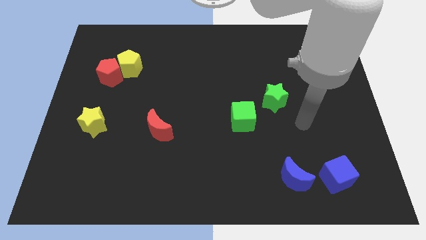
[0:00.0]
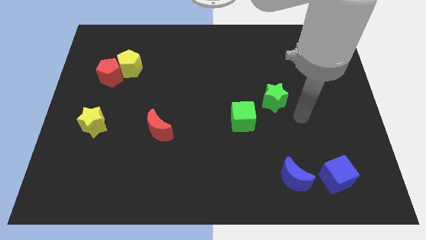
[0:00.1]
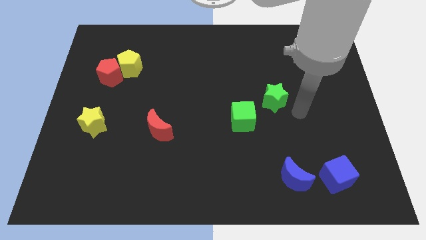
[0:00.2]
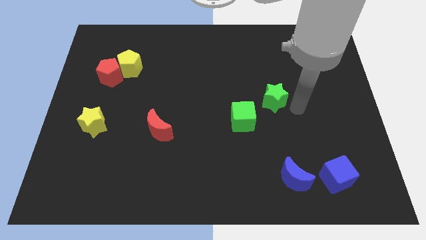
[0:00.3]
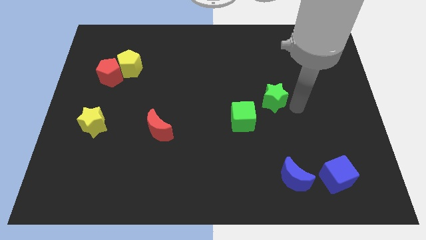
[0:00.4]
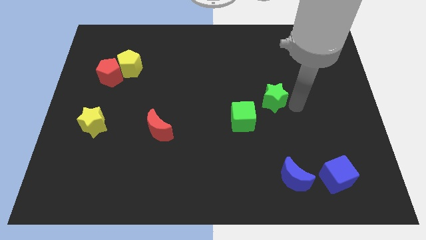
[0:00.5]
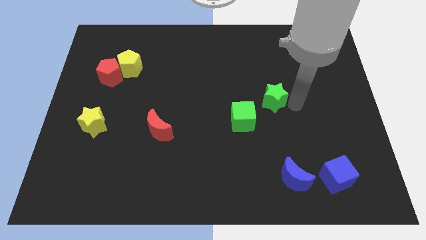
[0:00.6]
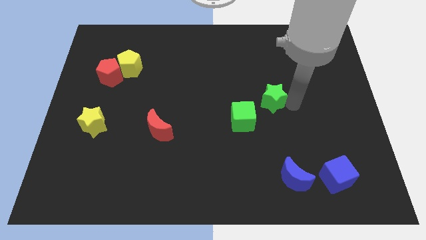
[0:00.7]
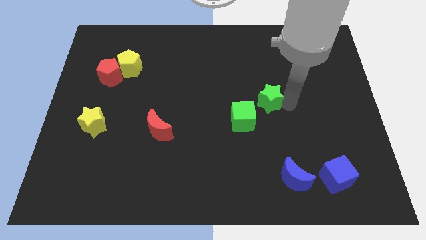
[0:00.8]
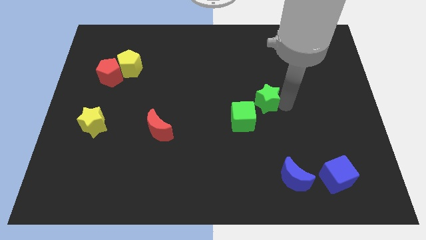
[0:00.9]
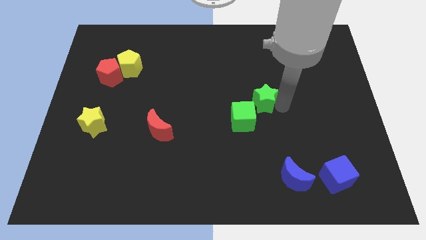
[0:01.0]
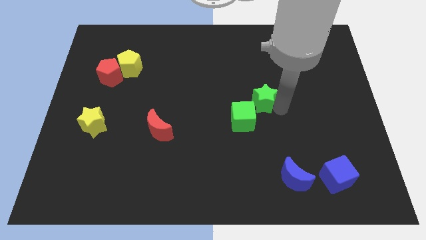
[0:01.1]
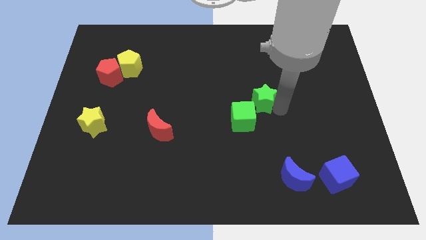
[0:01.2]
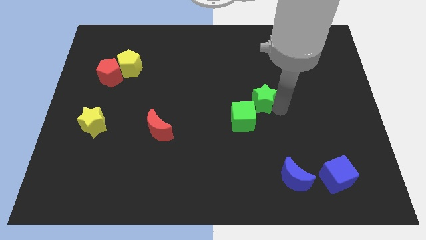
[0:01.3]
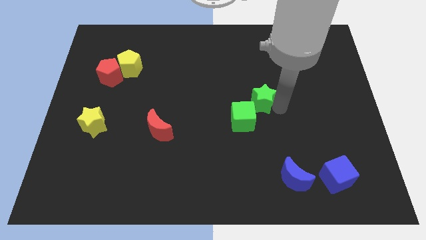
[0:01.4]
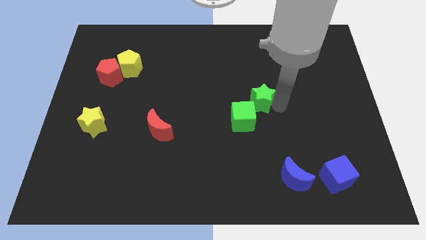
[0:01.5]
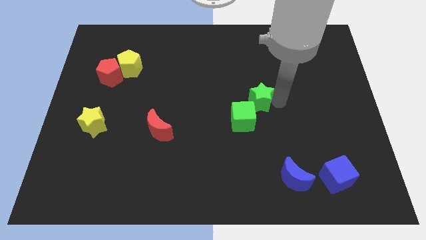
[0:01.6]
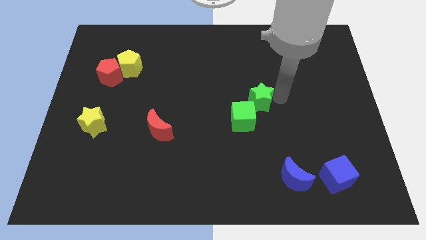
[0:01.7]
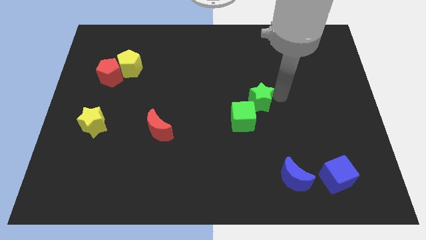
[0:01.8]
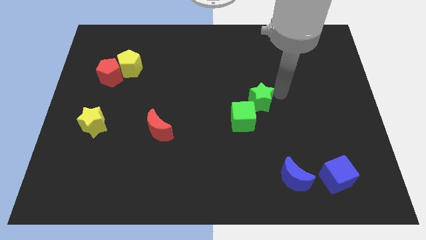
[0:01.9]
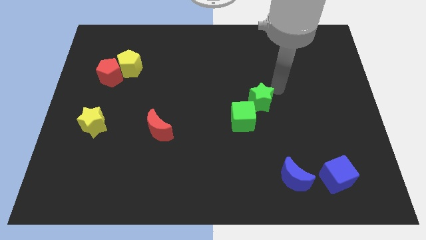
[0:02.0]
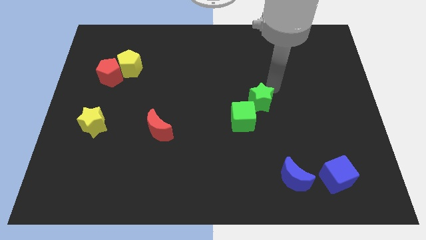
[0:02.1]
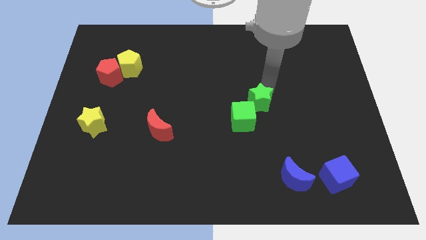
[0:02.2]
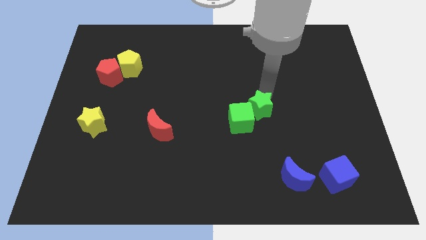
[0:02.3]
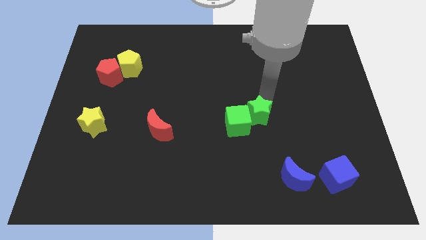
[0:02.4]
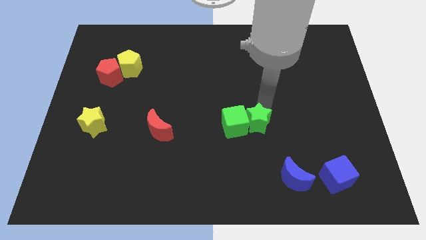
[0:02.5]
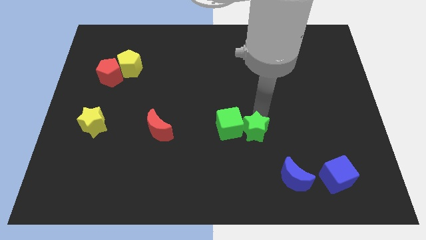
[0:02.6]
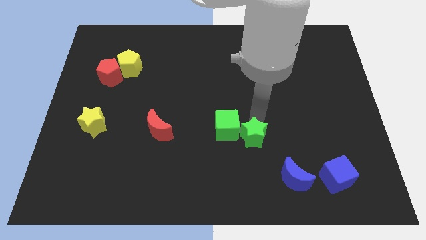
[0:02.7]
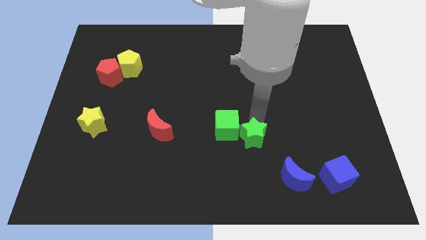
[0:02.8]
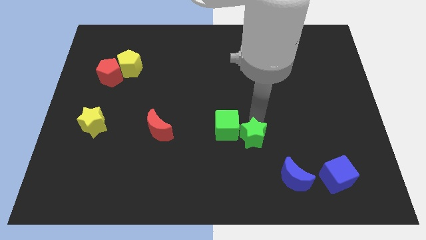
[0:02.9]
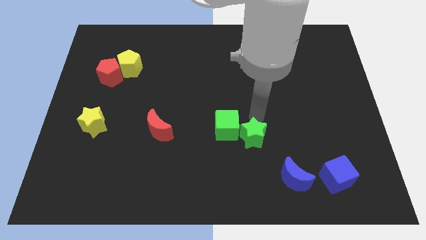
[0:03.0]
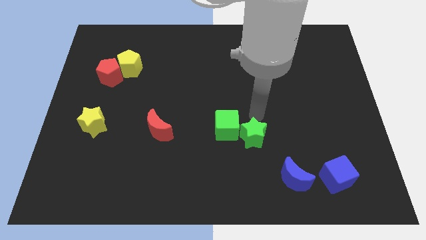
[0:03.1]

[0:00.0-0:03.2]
put the green star beside the green cube

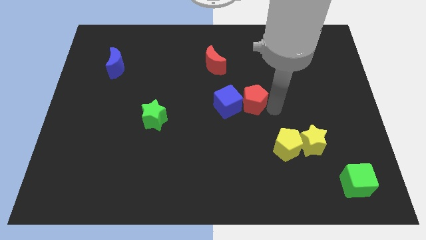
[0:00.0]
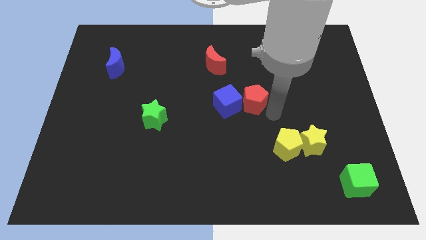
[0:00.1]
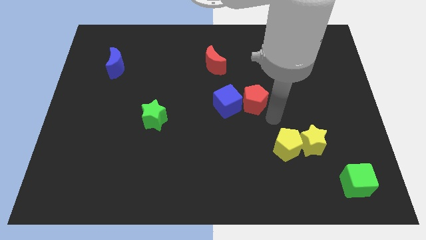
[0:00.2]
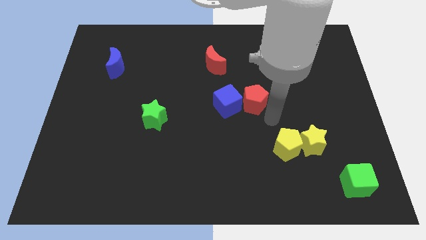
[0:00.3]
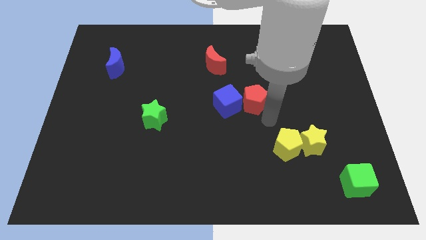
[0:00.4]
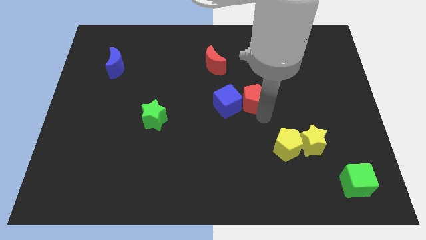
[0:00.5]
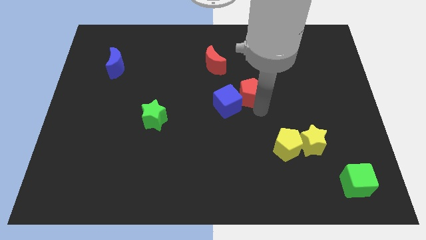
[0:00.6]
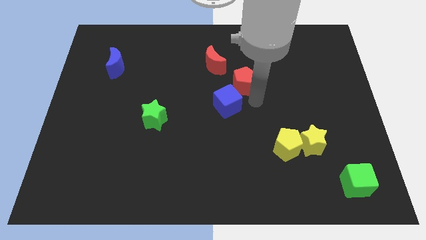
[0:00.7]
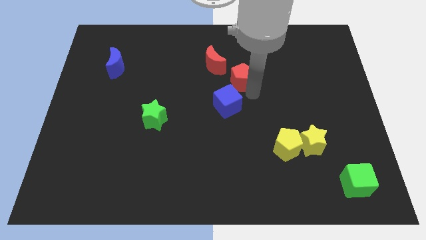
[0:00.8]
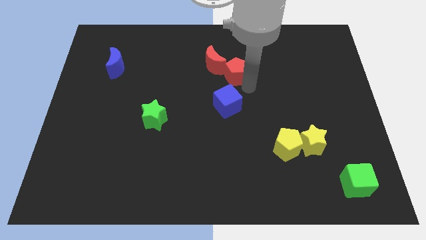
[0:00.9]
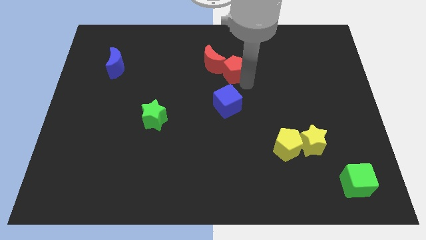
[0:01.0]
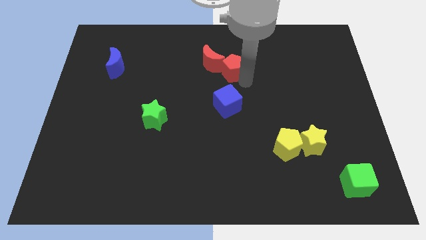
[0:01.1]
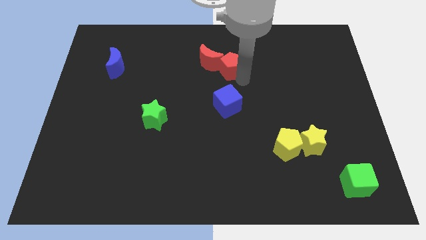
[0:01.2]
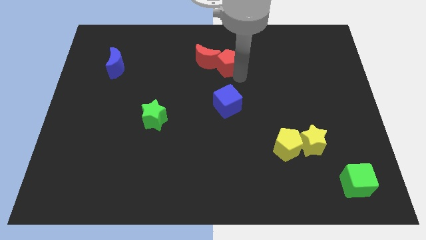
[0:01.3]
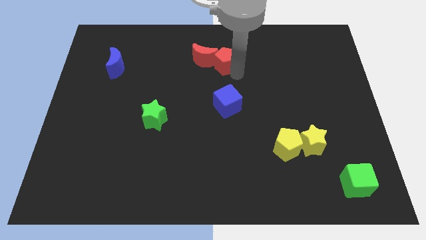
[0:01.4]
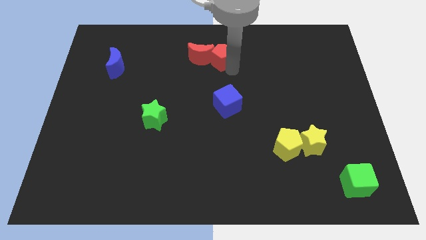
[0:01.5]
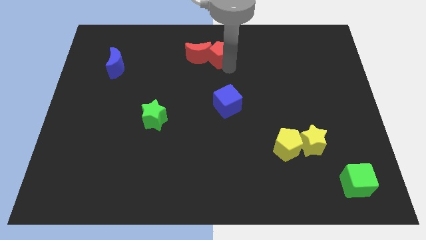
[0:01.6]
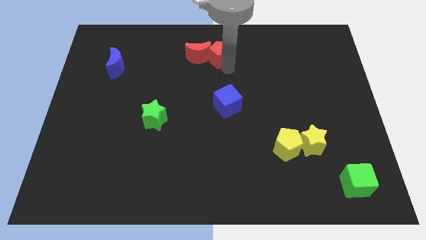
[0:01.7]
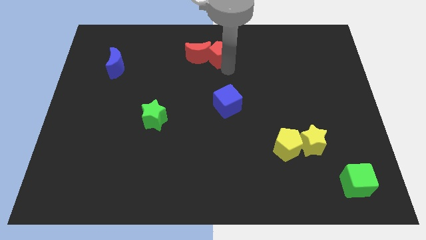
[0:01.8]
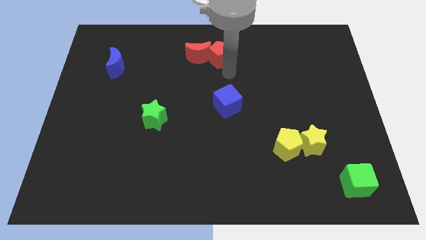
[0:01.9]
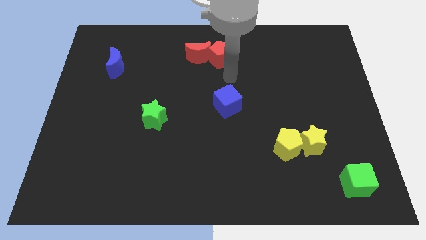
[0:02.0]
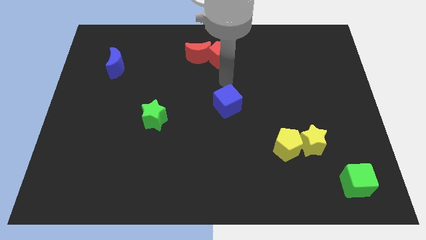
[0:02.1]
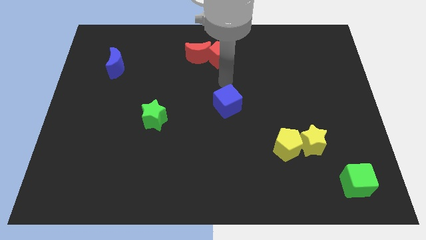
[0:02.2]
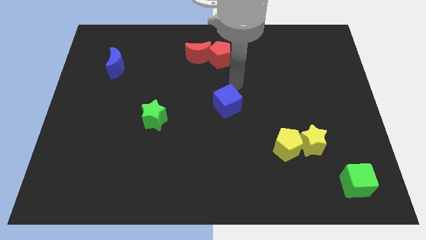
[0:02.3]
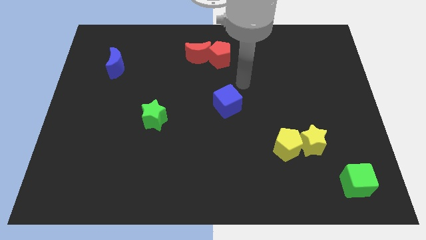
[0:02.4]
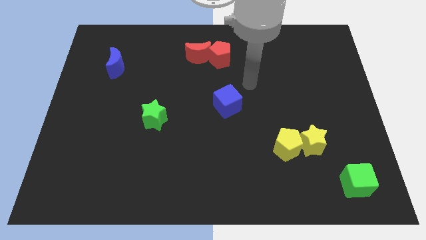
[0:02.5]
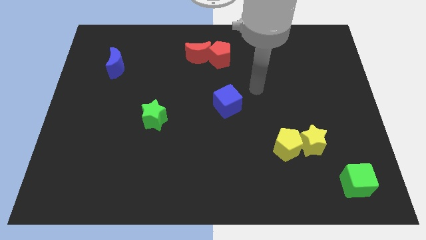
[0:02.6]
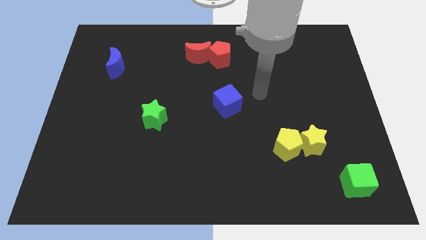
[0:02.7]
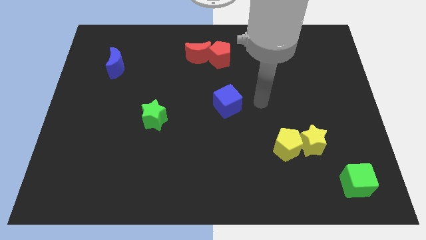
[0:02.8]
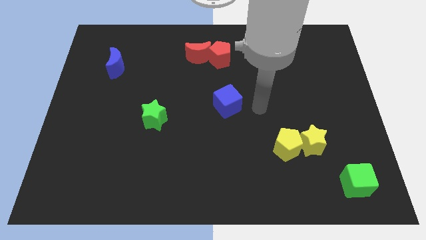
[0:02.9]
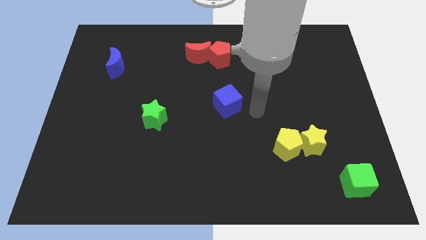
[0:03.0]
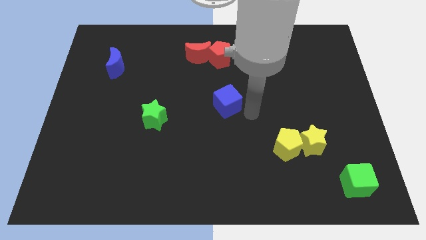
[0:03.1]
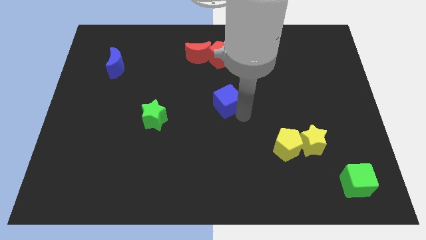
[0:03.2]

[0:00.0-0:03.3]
push red moon slightly to the left side of board with red pentagon

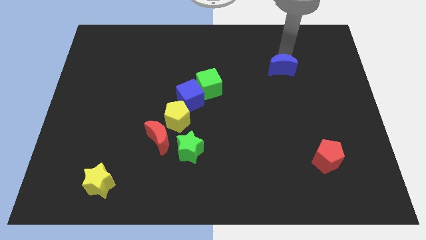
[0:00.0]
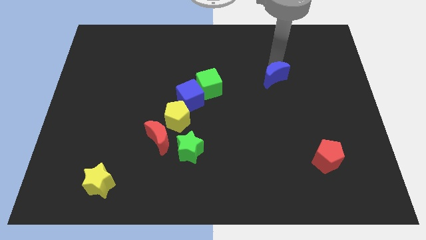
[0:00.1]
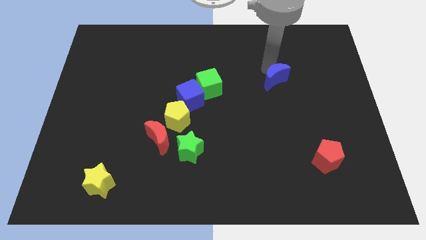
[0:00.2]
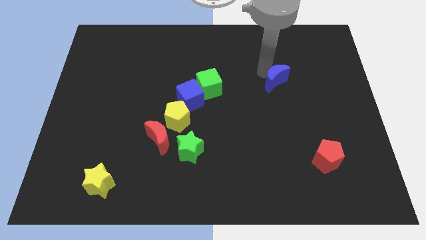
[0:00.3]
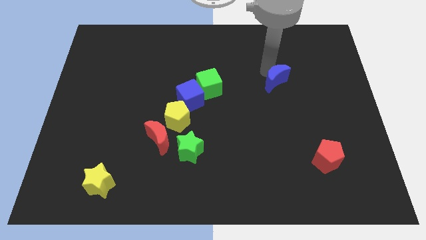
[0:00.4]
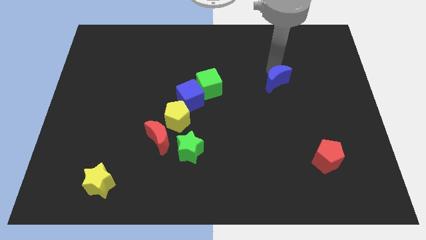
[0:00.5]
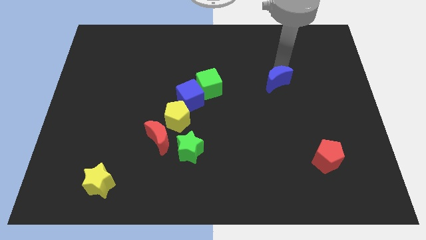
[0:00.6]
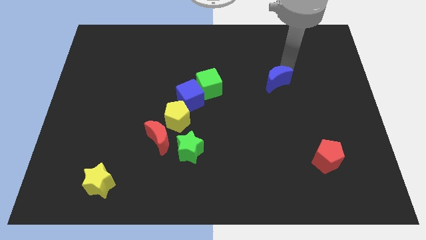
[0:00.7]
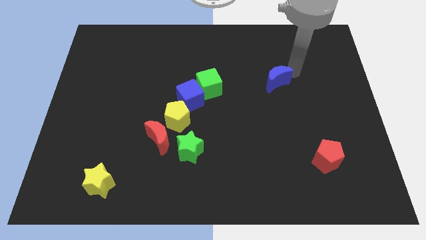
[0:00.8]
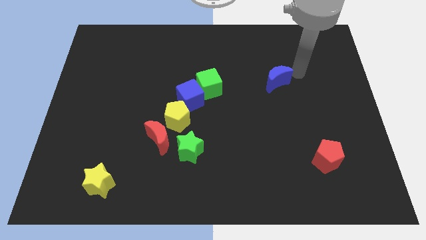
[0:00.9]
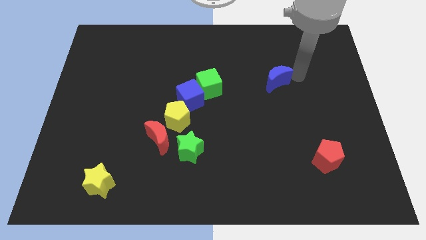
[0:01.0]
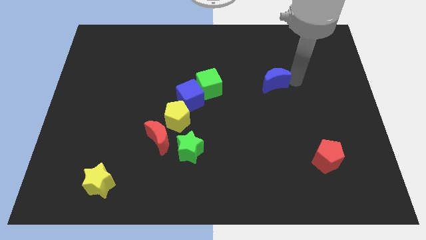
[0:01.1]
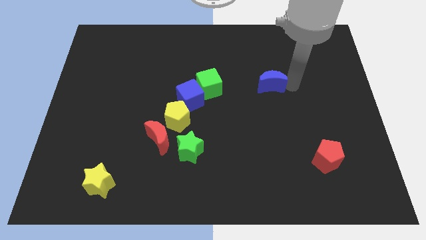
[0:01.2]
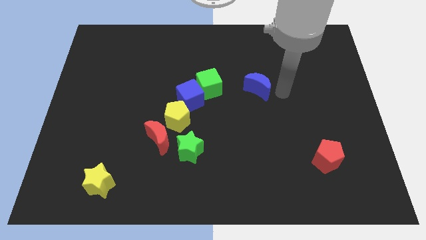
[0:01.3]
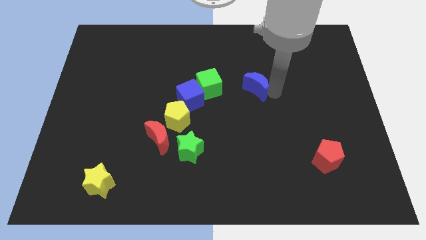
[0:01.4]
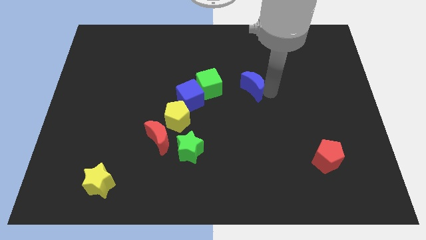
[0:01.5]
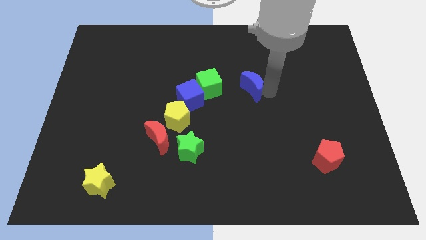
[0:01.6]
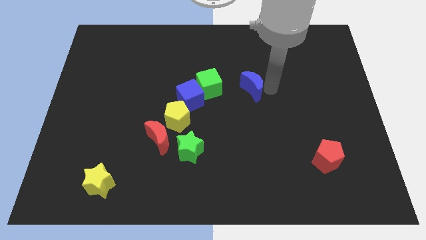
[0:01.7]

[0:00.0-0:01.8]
push the blue crescent towards the right side of the green cube

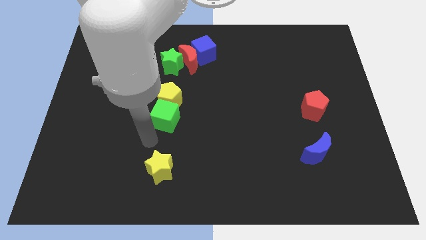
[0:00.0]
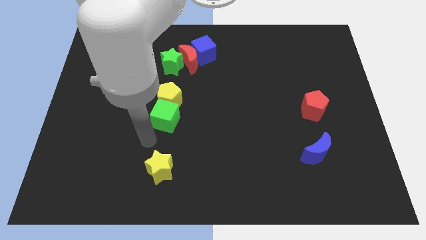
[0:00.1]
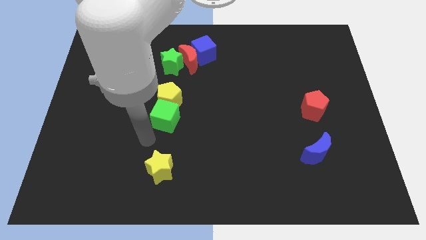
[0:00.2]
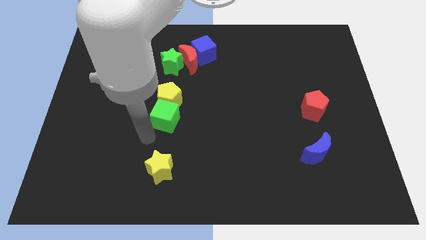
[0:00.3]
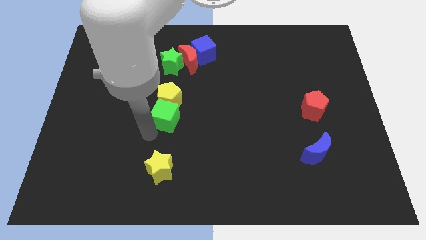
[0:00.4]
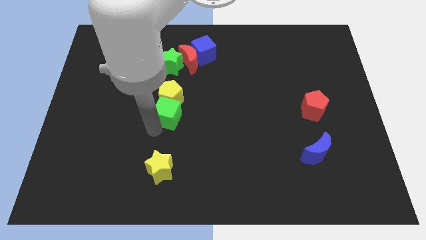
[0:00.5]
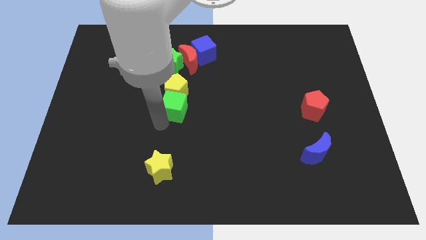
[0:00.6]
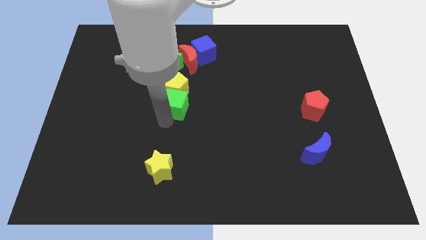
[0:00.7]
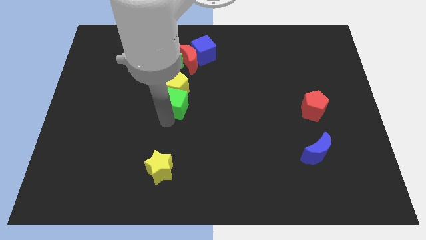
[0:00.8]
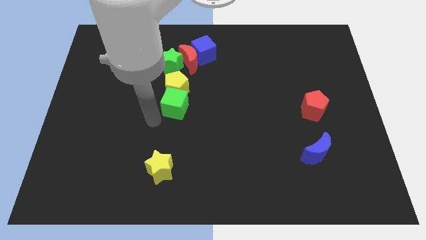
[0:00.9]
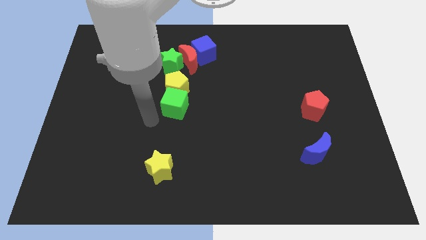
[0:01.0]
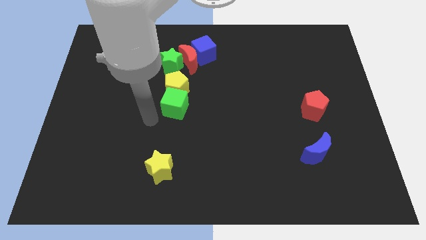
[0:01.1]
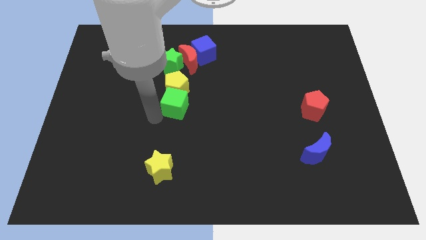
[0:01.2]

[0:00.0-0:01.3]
push the green cube and yellow pentagon to the bottom side of the green star
